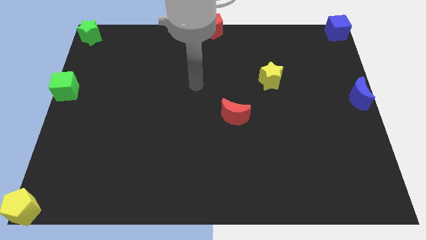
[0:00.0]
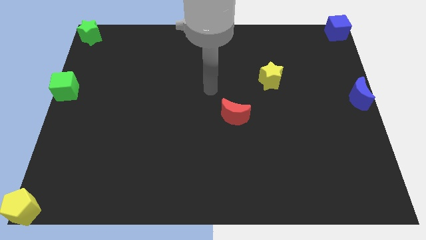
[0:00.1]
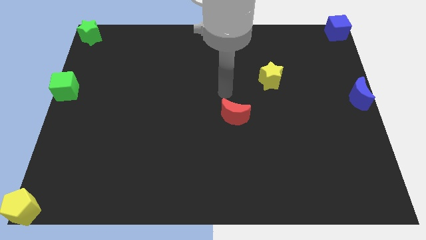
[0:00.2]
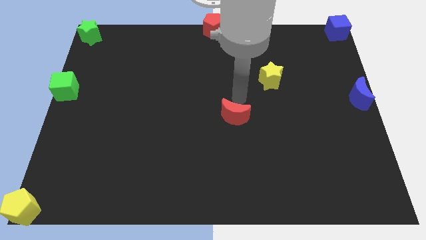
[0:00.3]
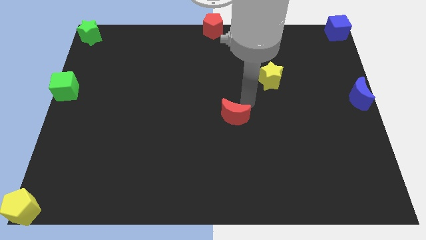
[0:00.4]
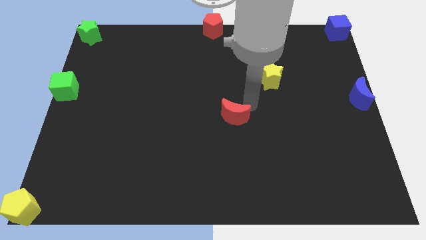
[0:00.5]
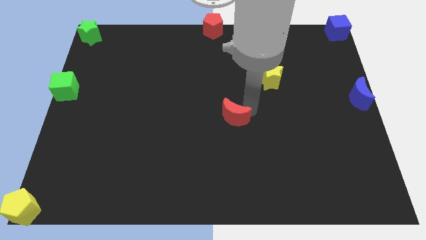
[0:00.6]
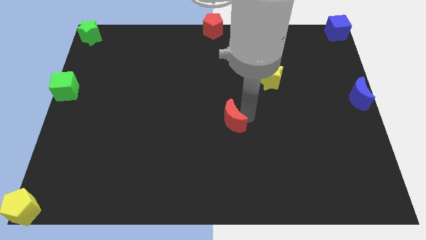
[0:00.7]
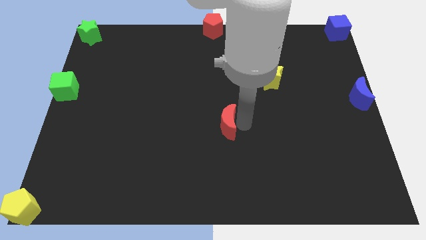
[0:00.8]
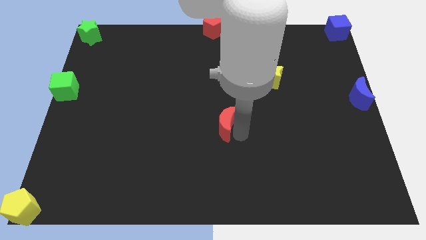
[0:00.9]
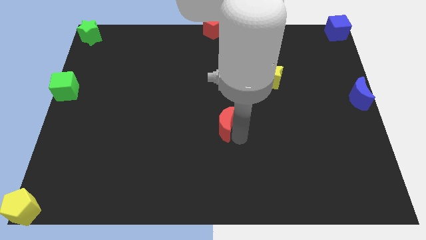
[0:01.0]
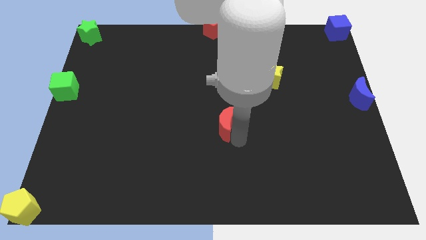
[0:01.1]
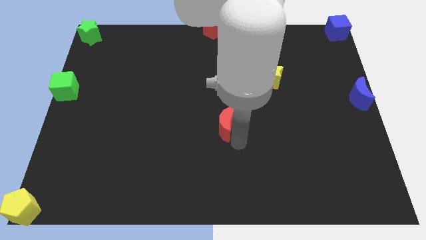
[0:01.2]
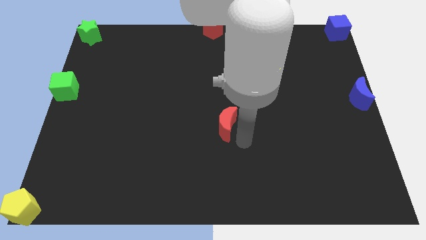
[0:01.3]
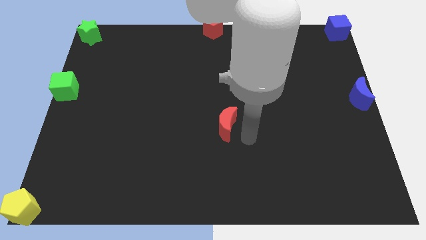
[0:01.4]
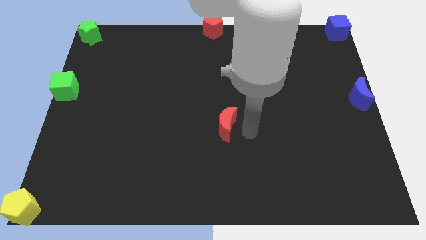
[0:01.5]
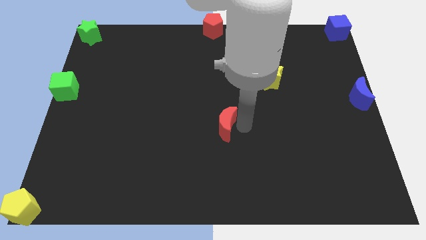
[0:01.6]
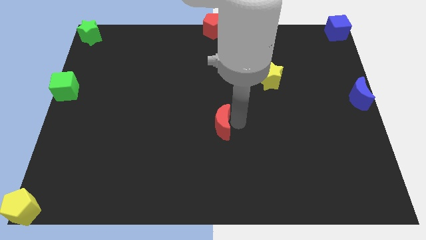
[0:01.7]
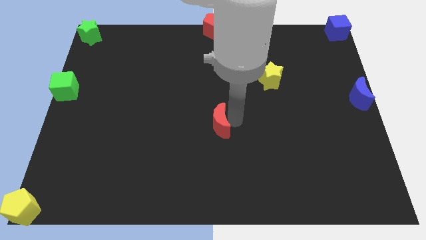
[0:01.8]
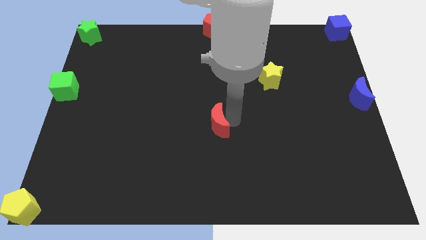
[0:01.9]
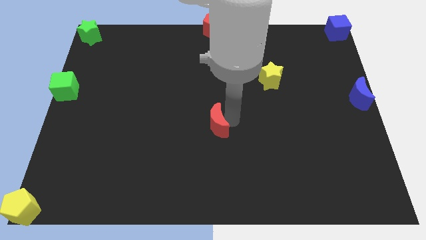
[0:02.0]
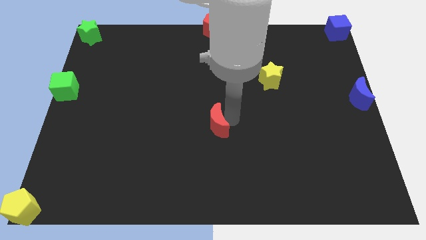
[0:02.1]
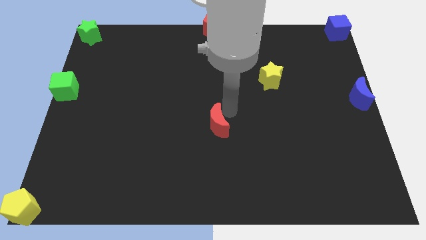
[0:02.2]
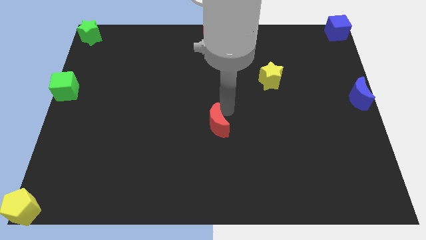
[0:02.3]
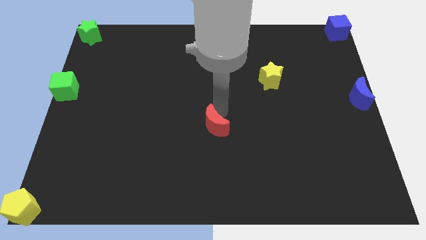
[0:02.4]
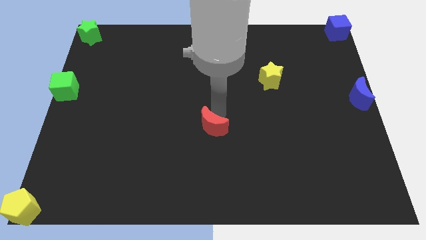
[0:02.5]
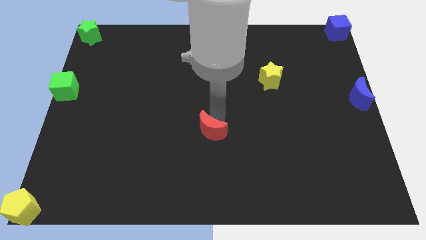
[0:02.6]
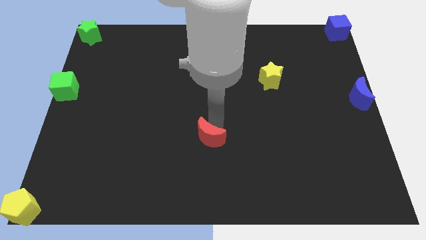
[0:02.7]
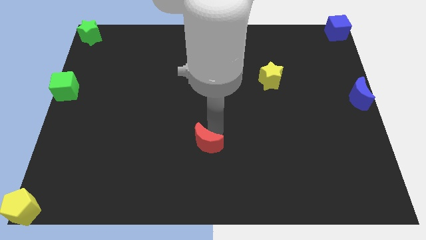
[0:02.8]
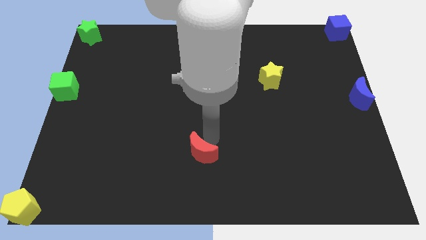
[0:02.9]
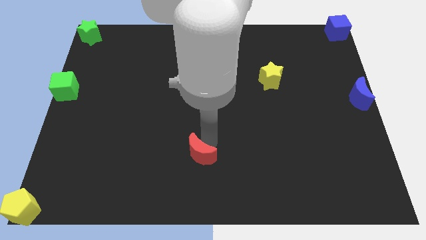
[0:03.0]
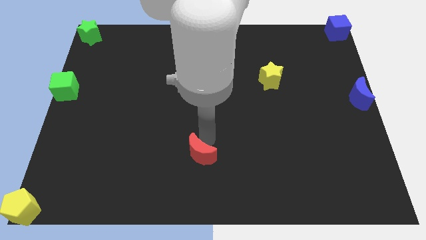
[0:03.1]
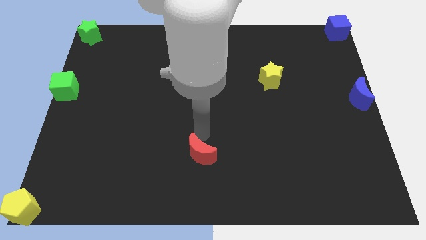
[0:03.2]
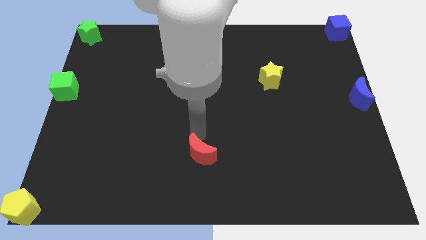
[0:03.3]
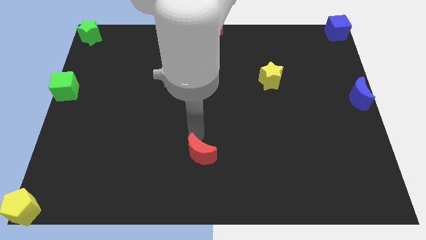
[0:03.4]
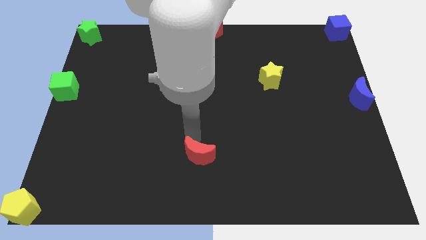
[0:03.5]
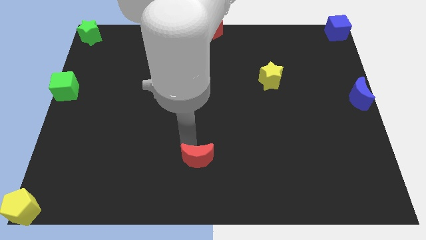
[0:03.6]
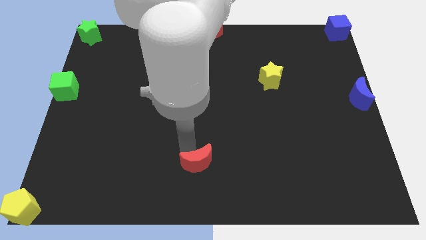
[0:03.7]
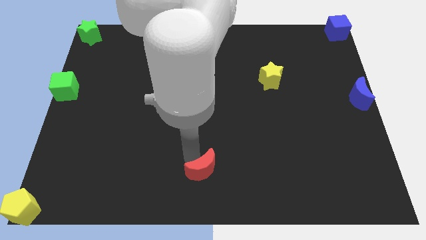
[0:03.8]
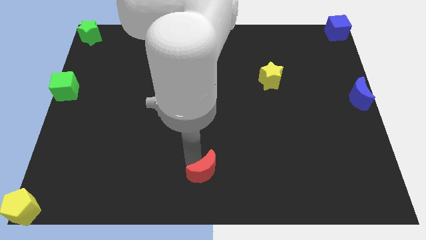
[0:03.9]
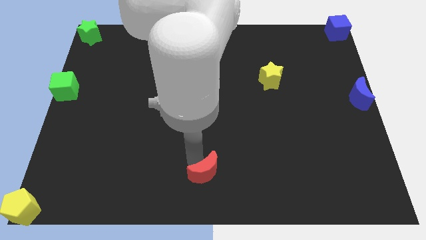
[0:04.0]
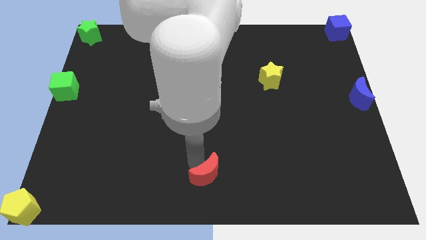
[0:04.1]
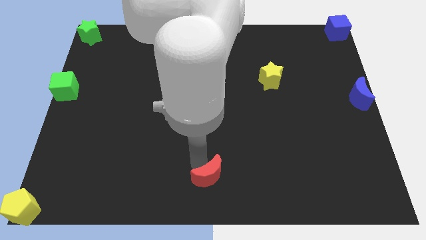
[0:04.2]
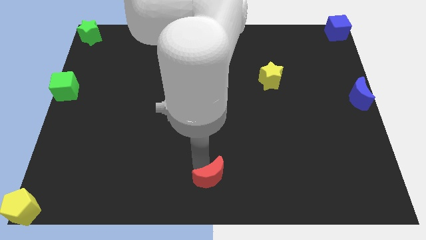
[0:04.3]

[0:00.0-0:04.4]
move the red moon to the bottom center

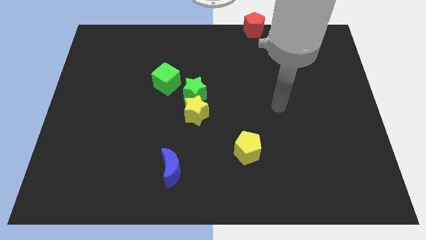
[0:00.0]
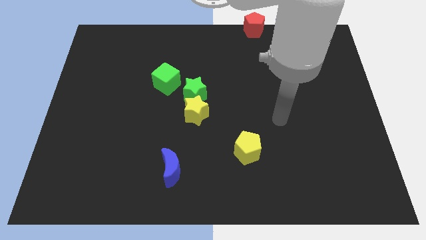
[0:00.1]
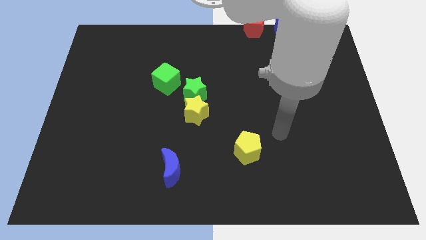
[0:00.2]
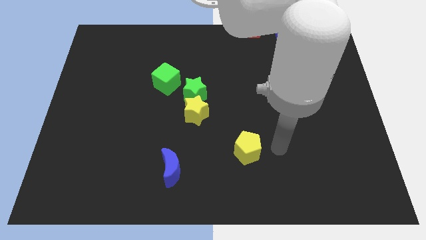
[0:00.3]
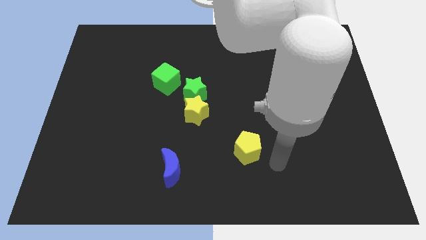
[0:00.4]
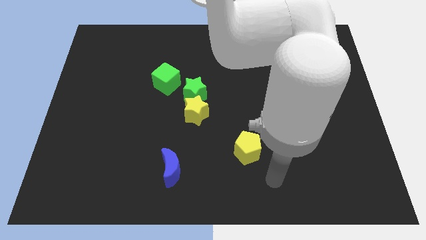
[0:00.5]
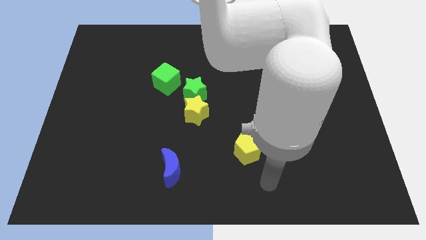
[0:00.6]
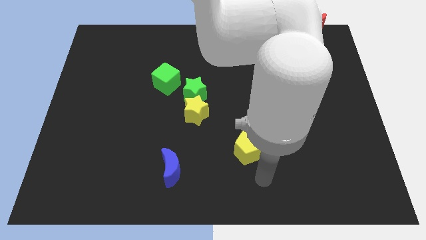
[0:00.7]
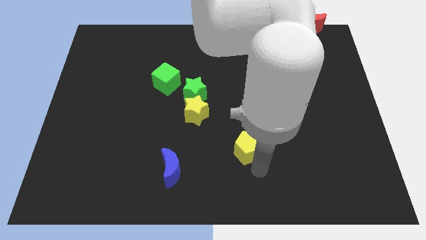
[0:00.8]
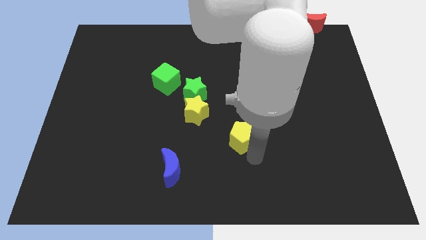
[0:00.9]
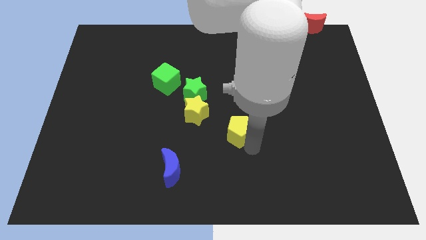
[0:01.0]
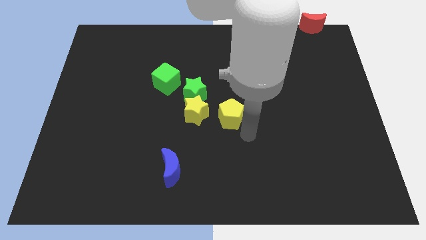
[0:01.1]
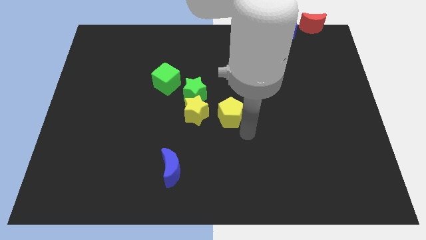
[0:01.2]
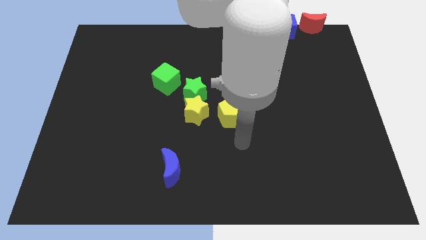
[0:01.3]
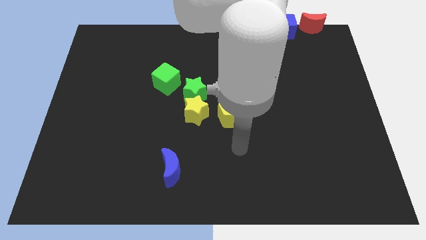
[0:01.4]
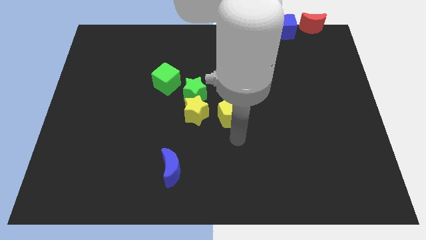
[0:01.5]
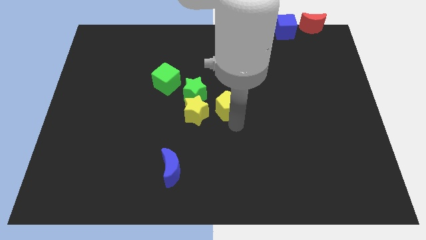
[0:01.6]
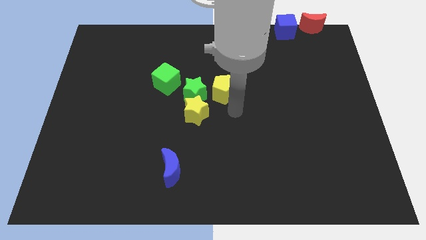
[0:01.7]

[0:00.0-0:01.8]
slide yellow pentagon to the center of the board

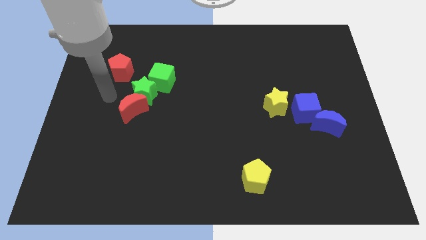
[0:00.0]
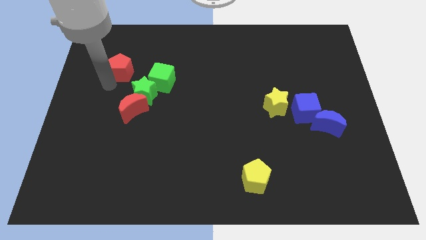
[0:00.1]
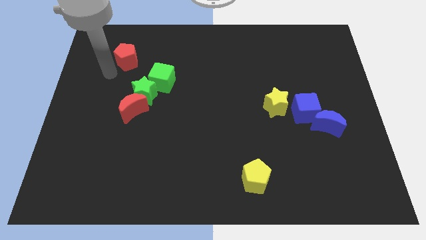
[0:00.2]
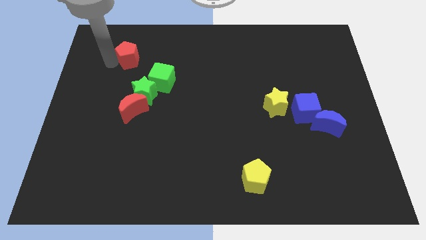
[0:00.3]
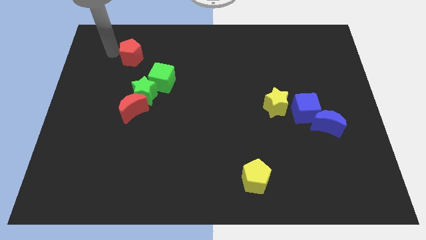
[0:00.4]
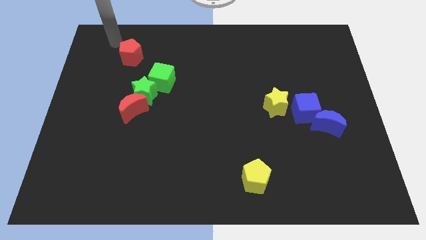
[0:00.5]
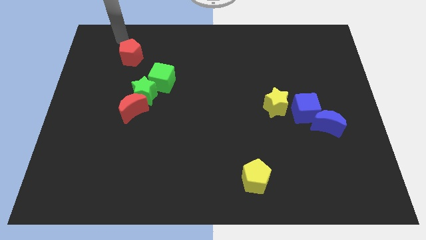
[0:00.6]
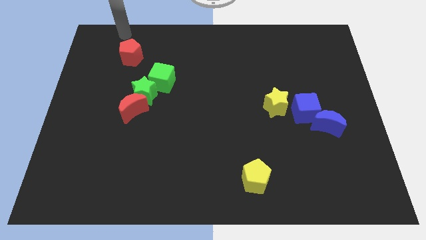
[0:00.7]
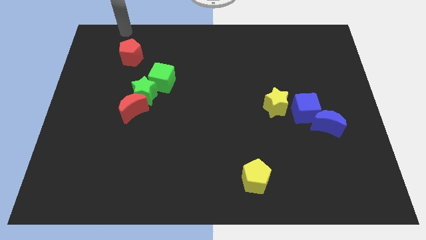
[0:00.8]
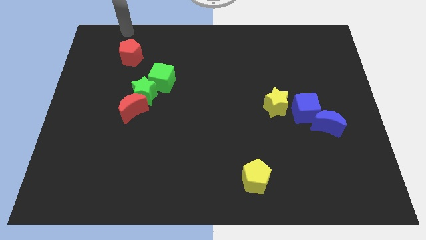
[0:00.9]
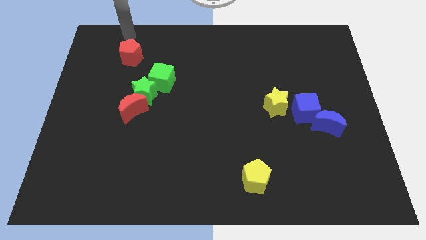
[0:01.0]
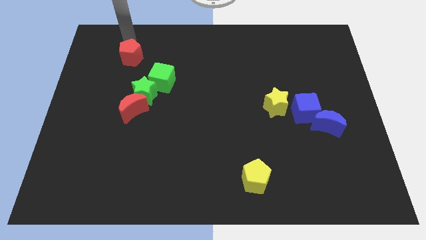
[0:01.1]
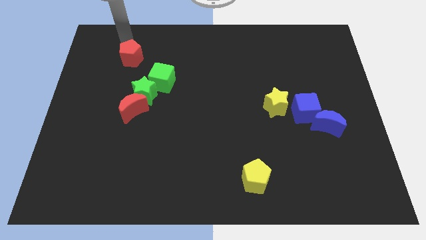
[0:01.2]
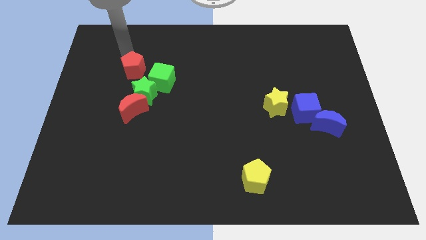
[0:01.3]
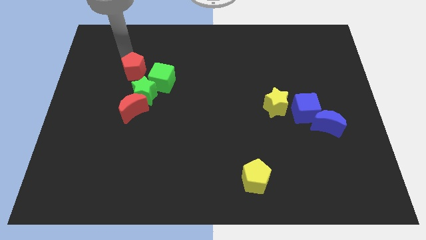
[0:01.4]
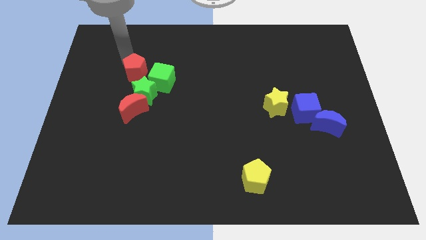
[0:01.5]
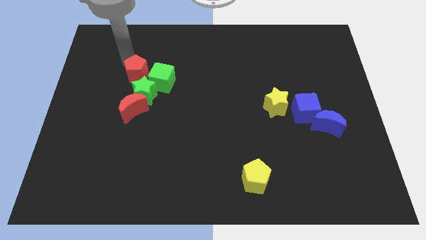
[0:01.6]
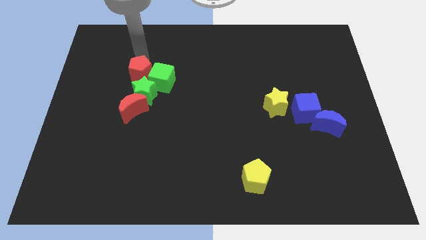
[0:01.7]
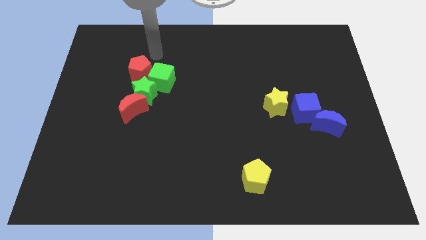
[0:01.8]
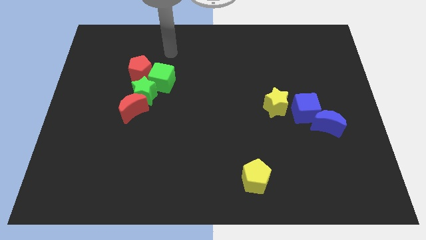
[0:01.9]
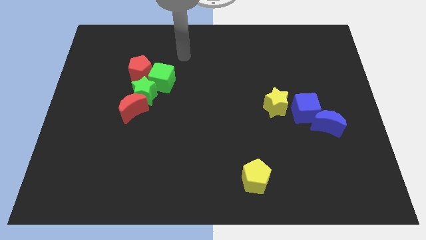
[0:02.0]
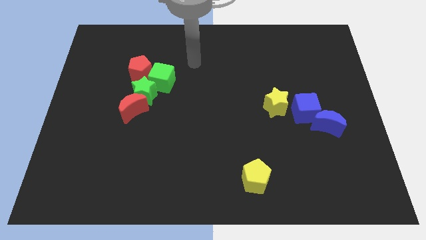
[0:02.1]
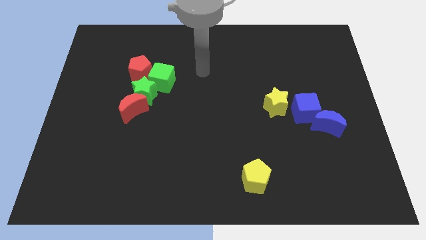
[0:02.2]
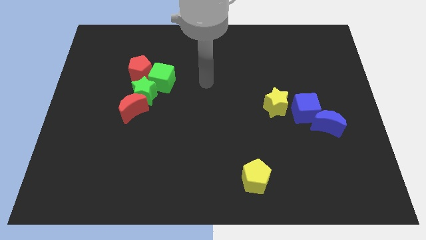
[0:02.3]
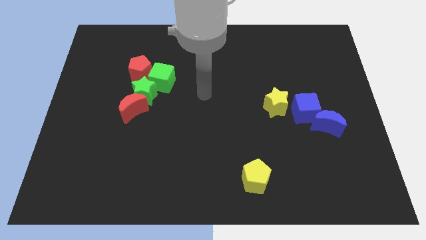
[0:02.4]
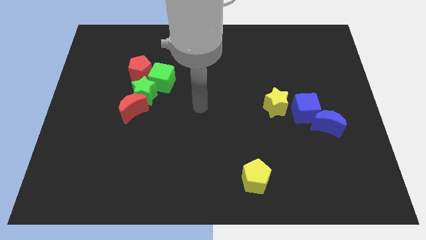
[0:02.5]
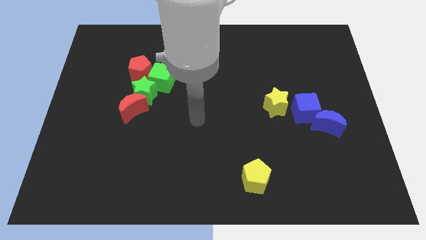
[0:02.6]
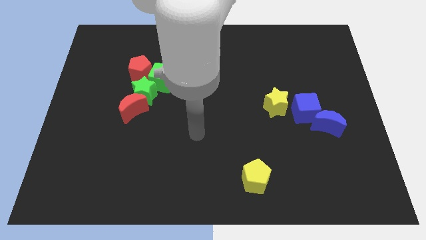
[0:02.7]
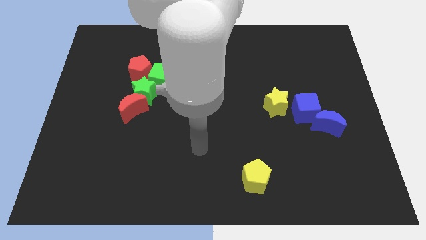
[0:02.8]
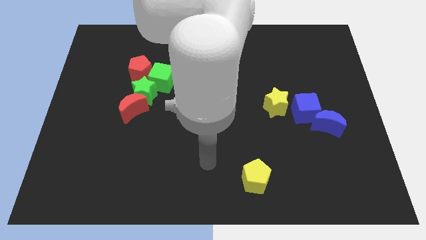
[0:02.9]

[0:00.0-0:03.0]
push the red pentagon to the left of the green cube
